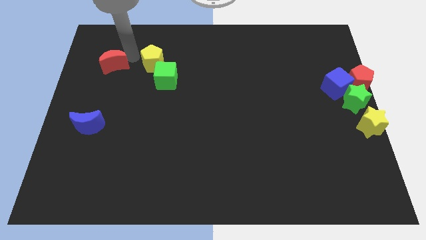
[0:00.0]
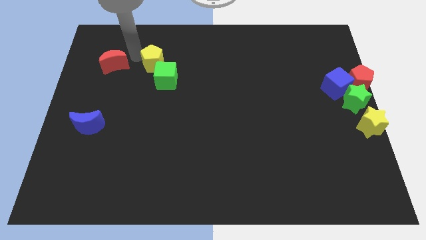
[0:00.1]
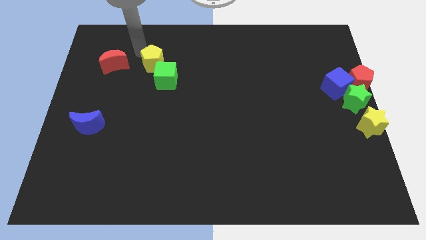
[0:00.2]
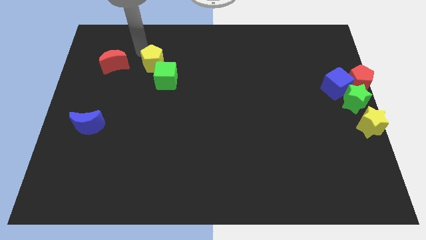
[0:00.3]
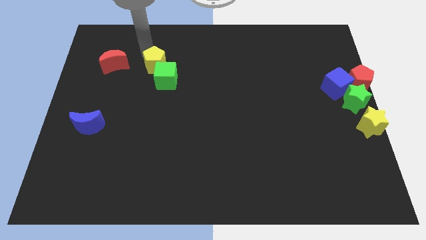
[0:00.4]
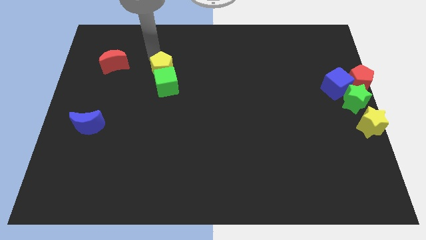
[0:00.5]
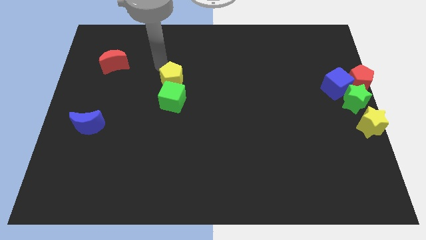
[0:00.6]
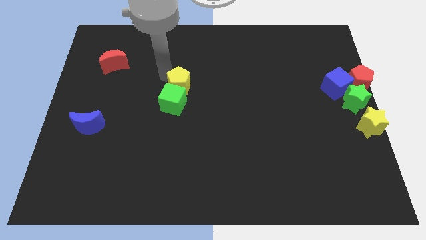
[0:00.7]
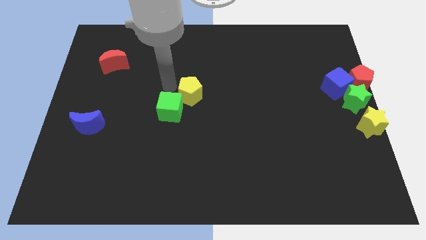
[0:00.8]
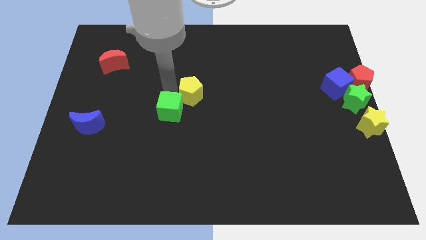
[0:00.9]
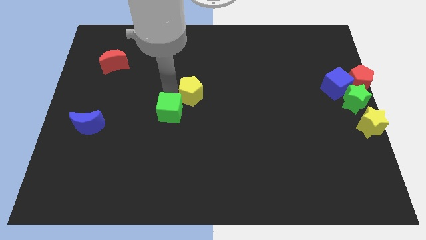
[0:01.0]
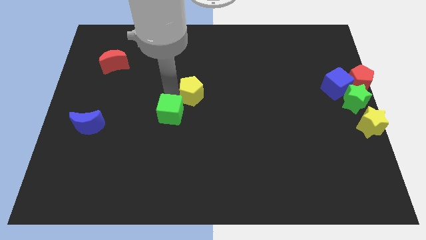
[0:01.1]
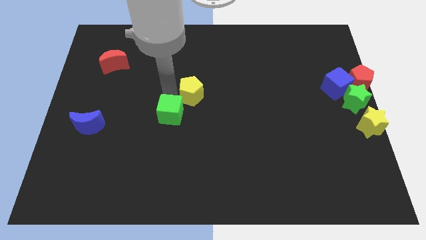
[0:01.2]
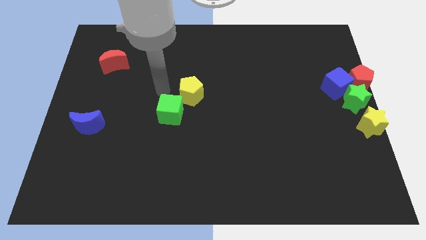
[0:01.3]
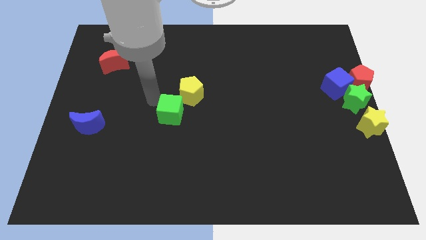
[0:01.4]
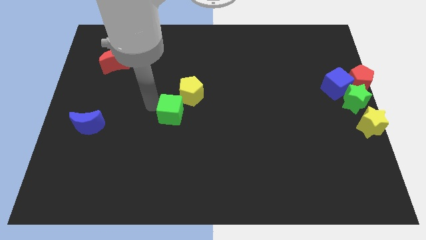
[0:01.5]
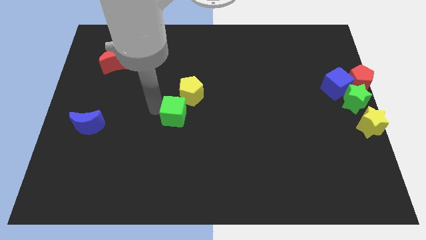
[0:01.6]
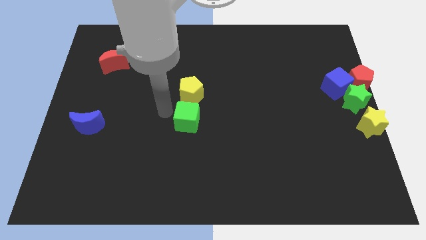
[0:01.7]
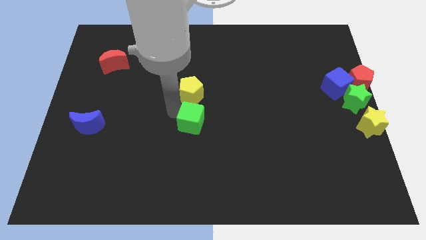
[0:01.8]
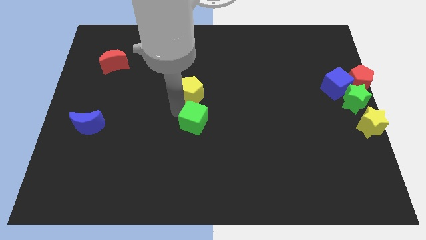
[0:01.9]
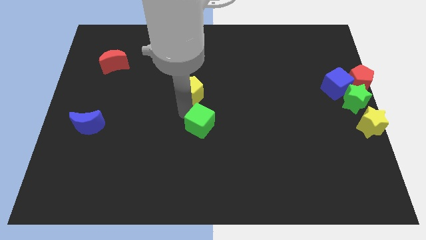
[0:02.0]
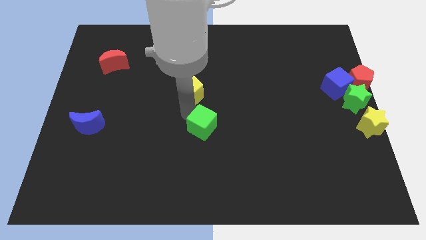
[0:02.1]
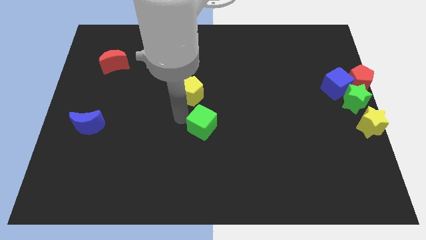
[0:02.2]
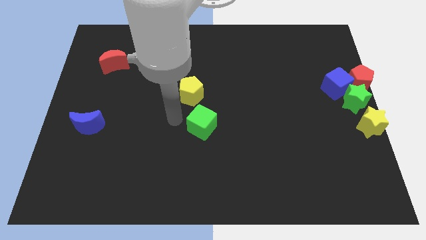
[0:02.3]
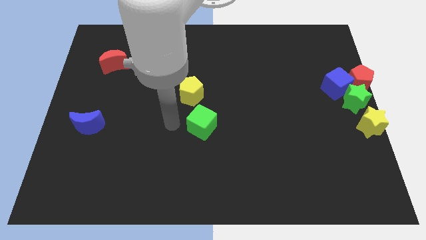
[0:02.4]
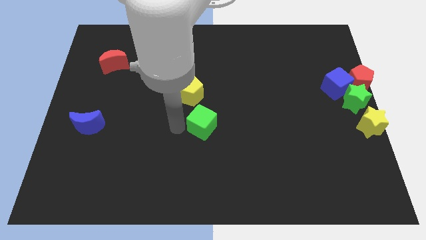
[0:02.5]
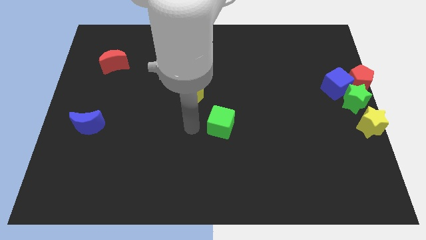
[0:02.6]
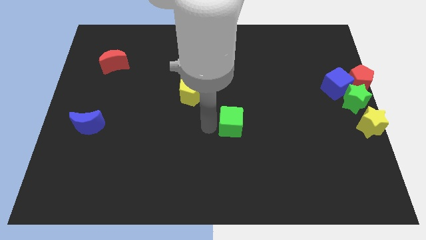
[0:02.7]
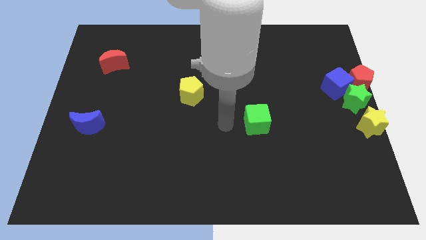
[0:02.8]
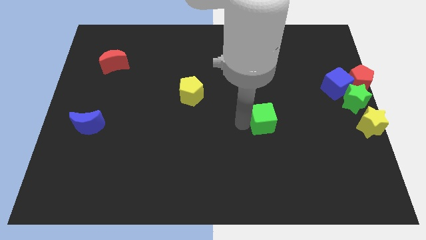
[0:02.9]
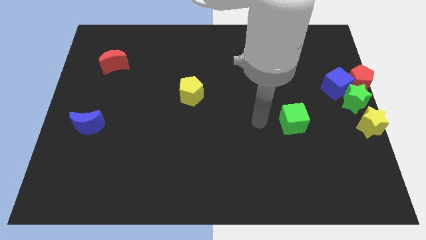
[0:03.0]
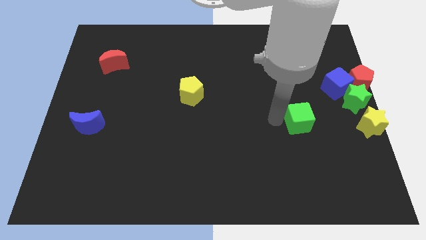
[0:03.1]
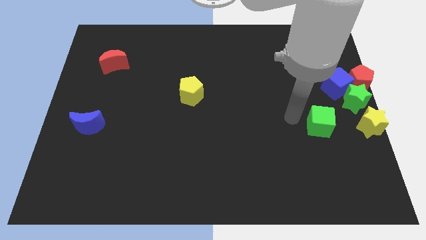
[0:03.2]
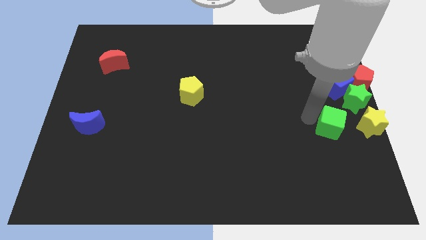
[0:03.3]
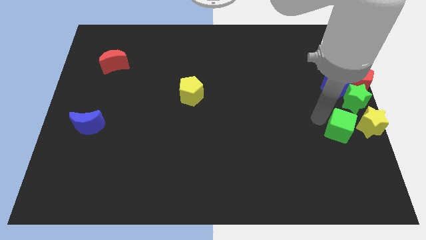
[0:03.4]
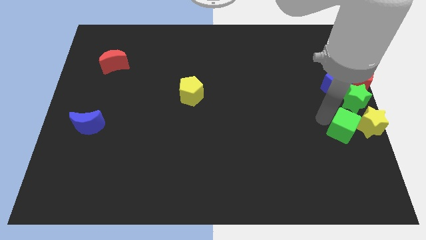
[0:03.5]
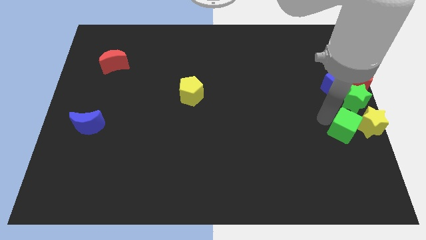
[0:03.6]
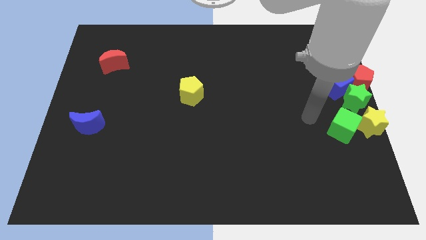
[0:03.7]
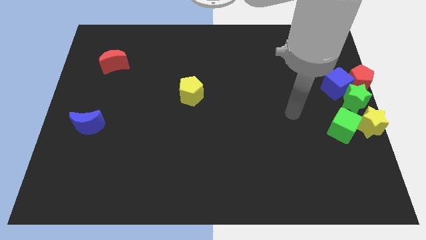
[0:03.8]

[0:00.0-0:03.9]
move the green cube towards the yellow star

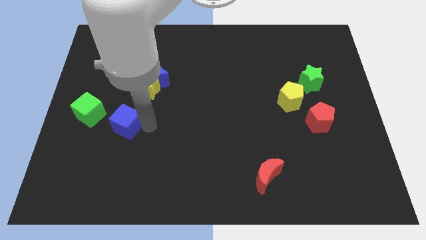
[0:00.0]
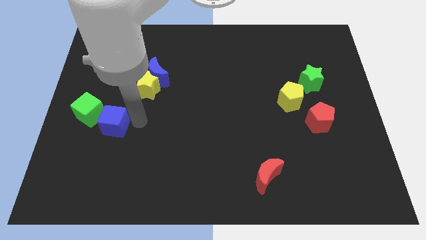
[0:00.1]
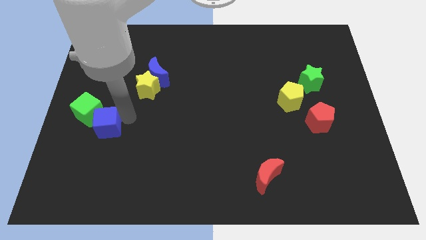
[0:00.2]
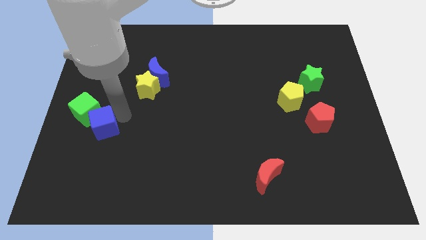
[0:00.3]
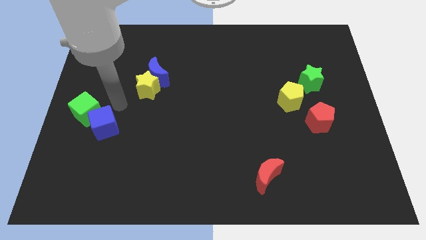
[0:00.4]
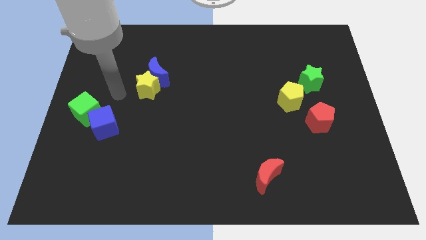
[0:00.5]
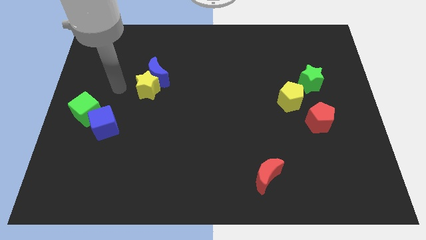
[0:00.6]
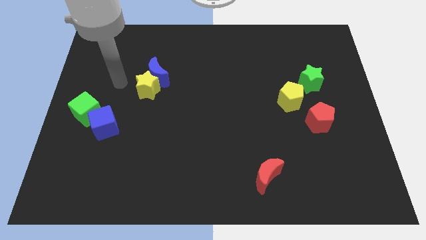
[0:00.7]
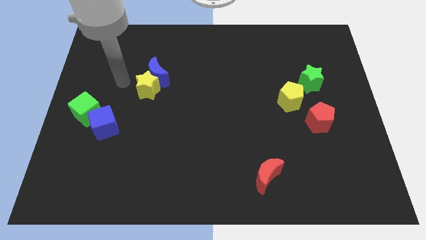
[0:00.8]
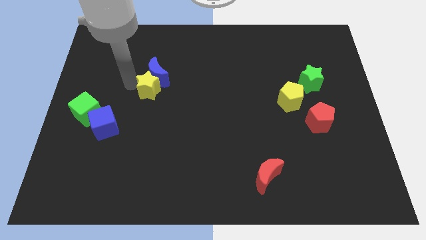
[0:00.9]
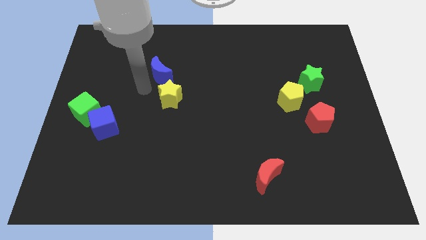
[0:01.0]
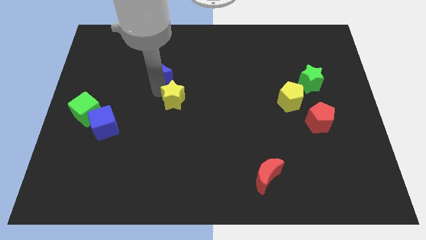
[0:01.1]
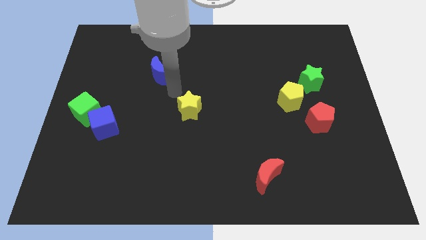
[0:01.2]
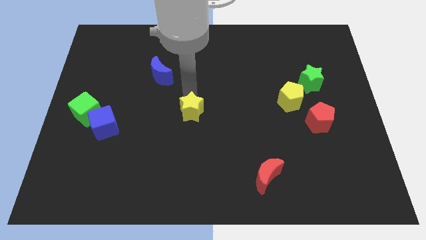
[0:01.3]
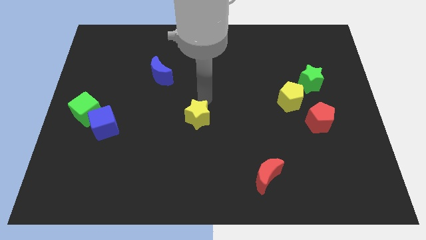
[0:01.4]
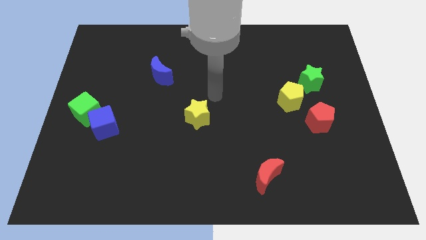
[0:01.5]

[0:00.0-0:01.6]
separate the yellow star from the blue crescent

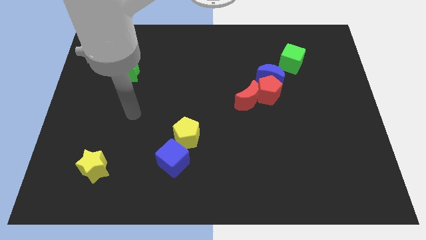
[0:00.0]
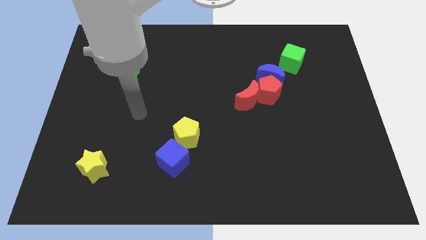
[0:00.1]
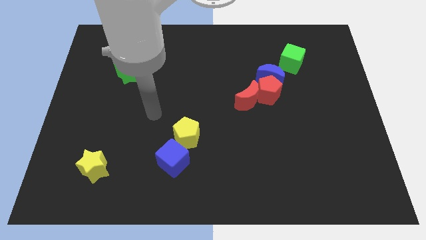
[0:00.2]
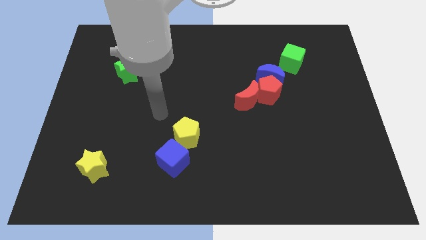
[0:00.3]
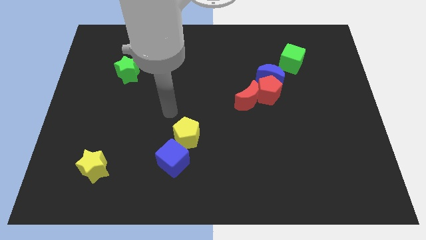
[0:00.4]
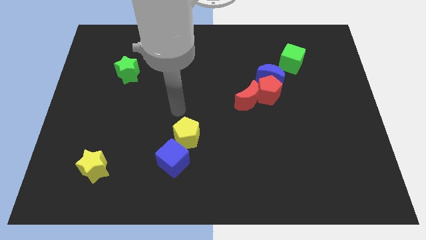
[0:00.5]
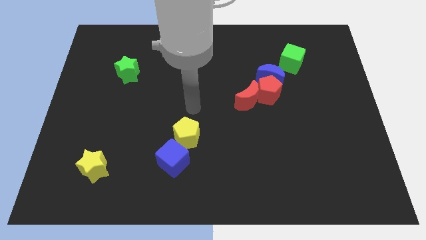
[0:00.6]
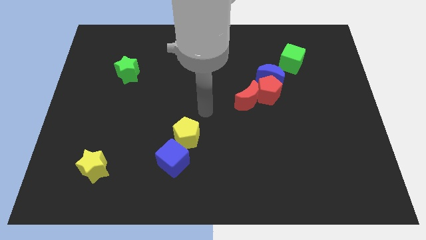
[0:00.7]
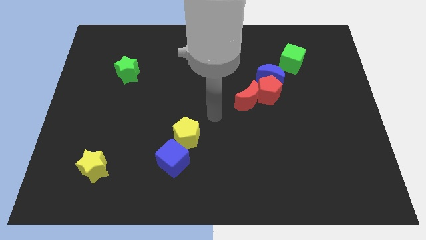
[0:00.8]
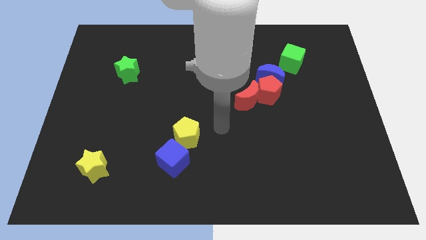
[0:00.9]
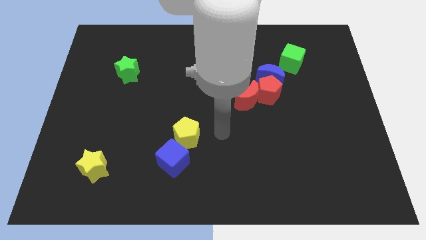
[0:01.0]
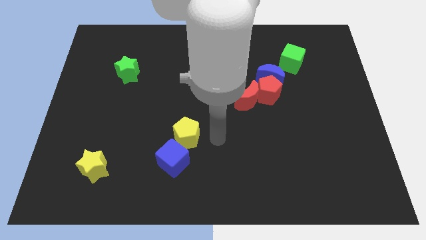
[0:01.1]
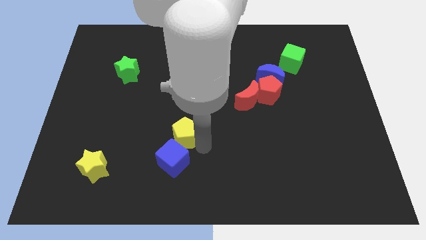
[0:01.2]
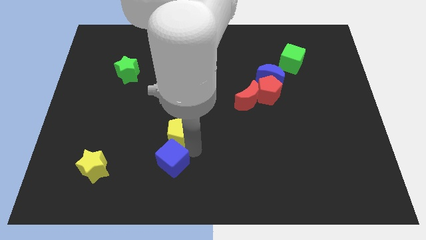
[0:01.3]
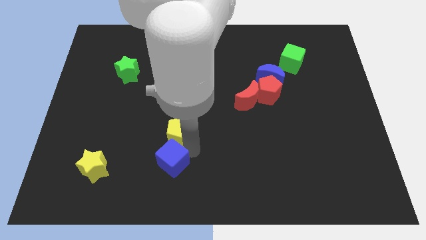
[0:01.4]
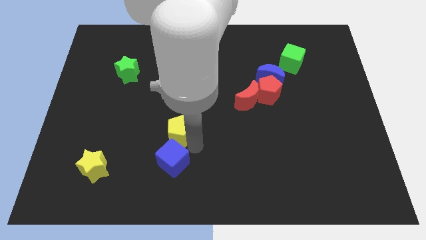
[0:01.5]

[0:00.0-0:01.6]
slide the yellow pentagon slightly to the left

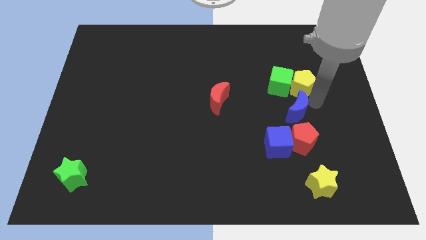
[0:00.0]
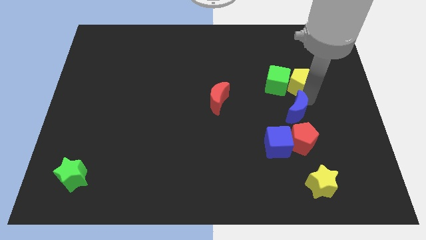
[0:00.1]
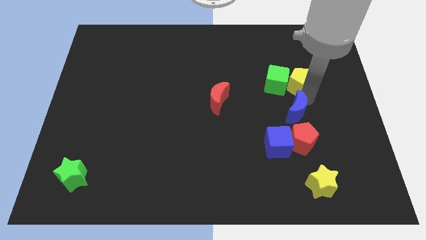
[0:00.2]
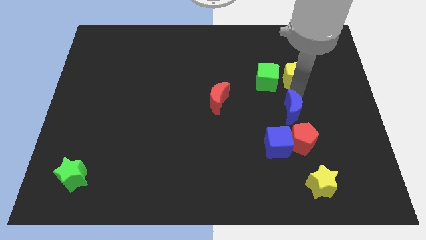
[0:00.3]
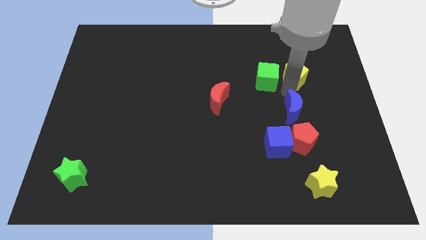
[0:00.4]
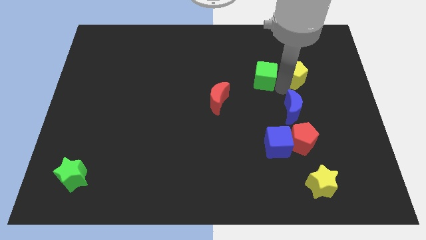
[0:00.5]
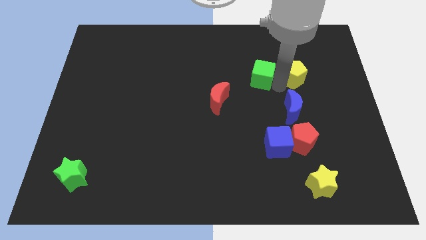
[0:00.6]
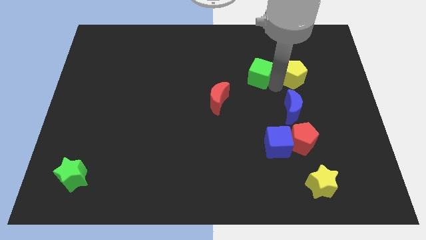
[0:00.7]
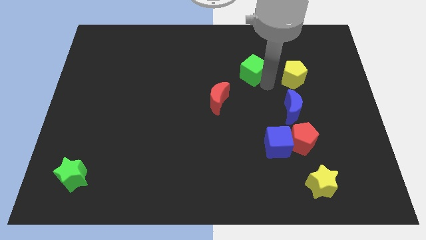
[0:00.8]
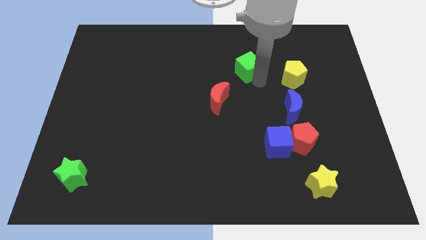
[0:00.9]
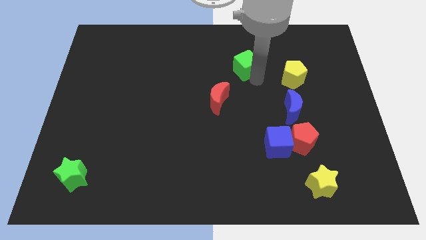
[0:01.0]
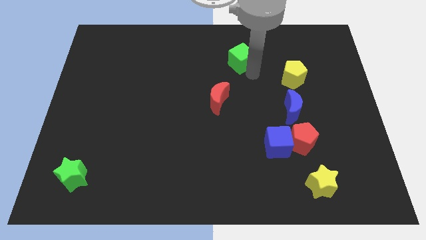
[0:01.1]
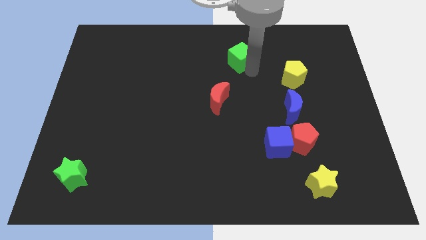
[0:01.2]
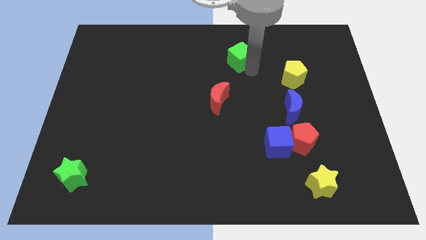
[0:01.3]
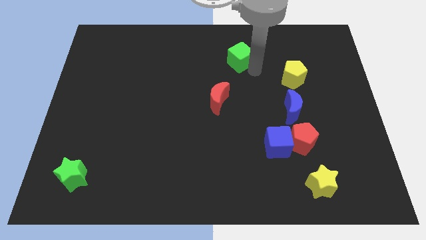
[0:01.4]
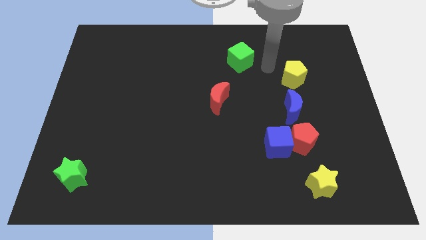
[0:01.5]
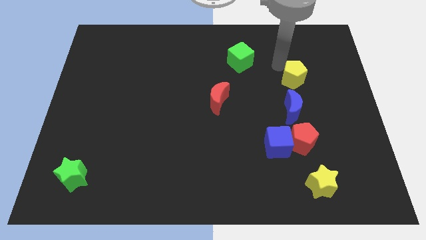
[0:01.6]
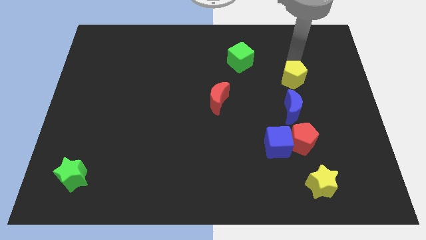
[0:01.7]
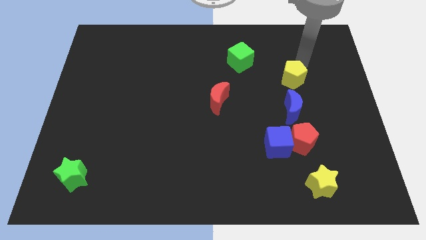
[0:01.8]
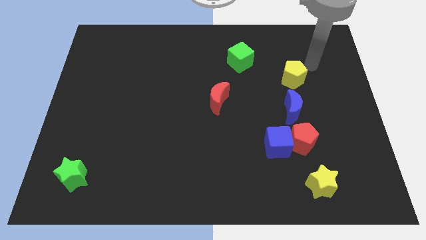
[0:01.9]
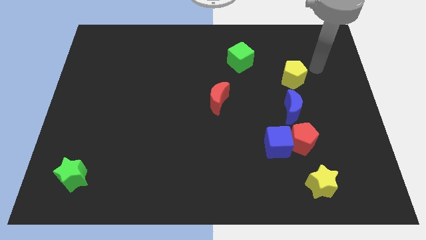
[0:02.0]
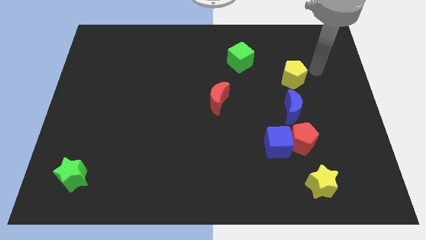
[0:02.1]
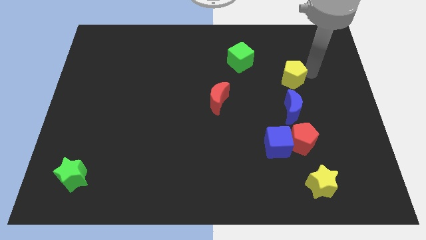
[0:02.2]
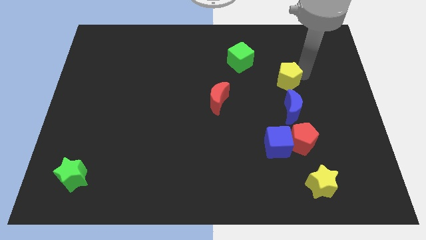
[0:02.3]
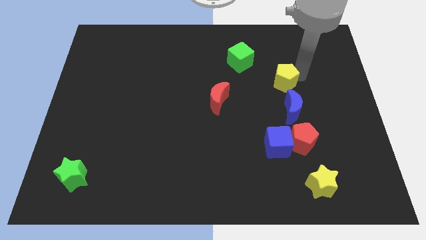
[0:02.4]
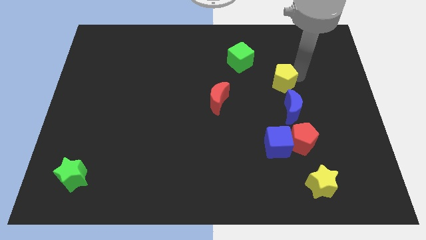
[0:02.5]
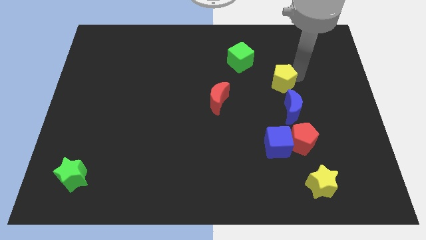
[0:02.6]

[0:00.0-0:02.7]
separate the green cube from the yellow pentagon
